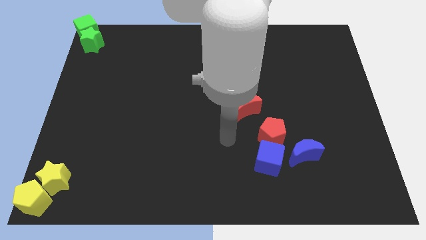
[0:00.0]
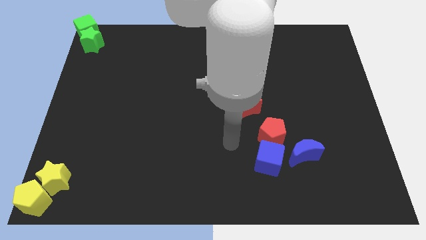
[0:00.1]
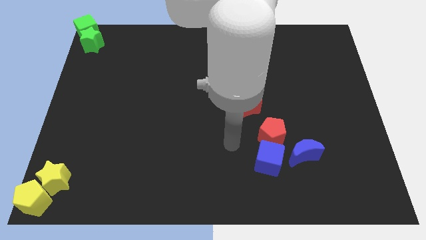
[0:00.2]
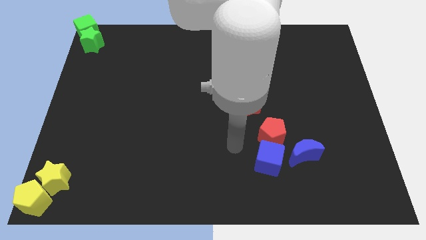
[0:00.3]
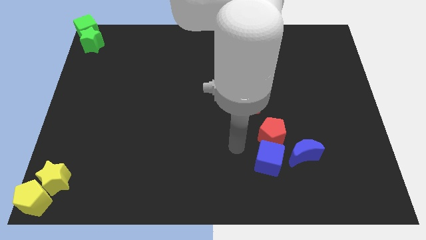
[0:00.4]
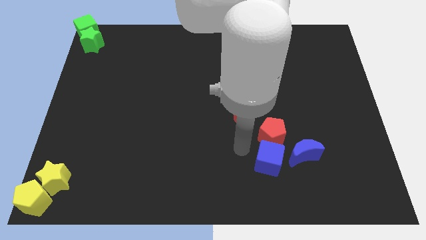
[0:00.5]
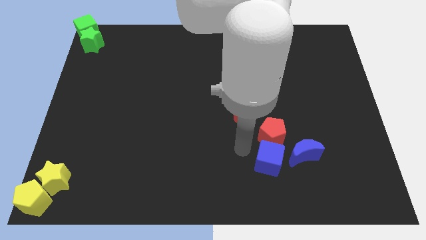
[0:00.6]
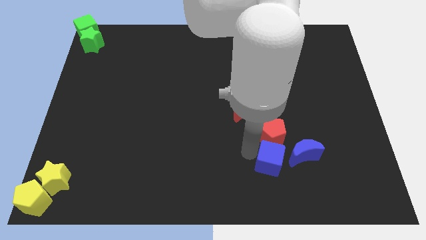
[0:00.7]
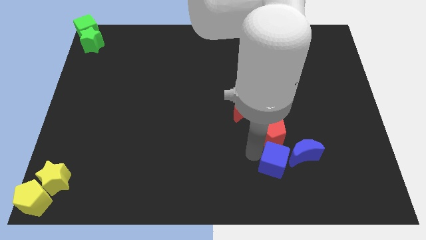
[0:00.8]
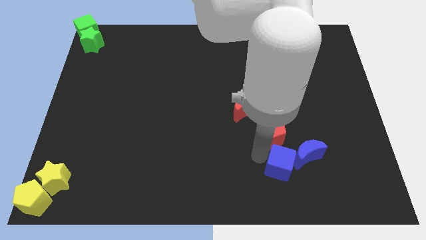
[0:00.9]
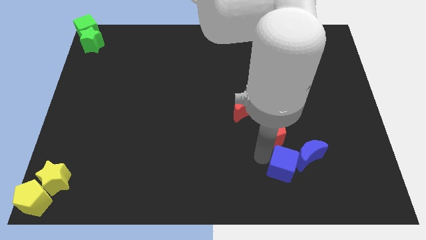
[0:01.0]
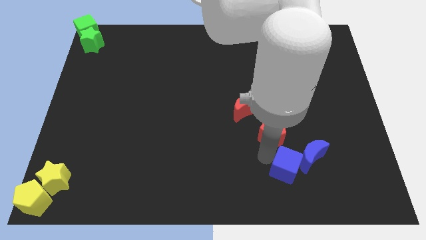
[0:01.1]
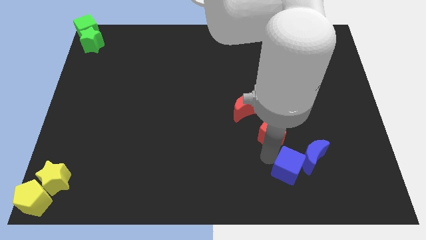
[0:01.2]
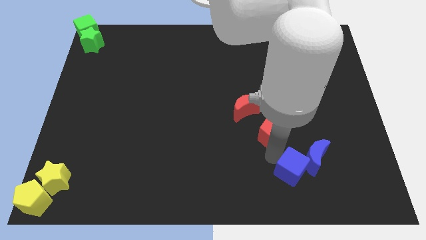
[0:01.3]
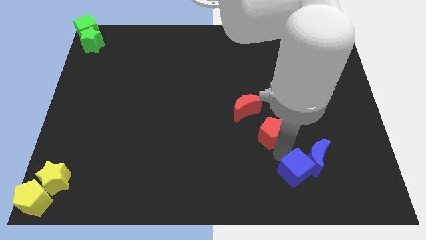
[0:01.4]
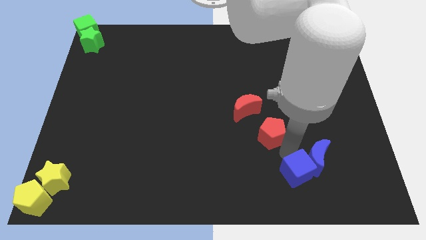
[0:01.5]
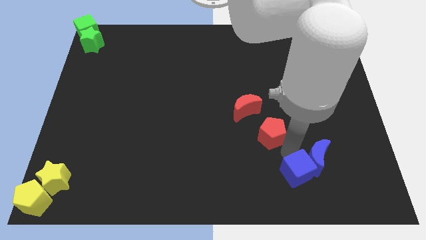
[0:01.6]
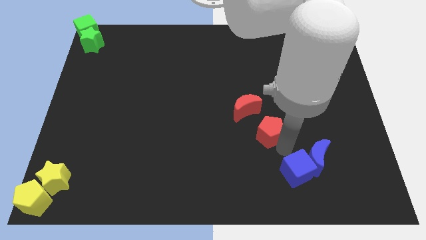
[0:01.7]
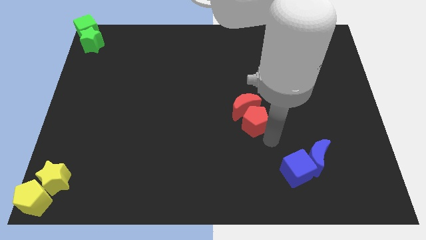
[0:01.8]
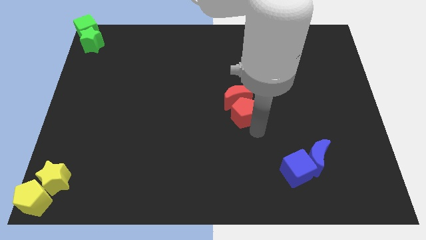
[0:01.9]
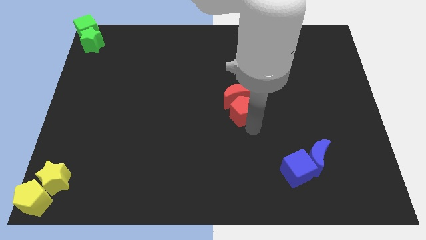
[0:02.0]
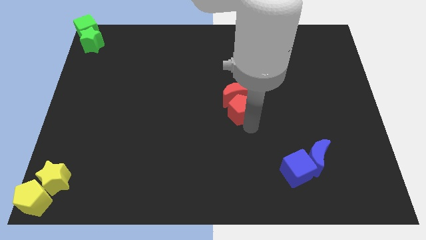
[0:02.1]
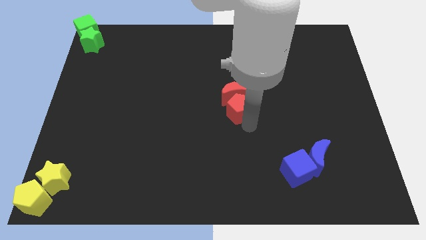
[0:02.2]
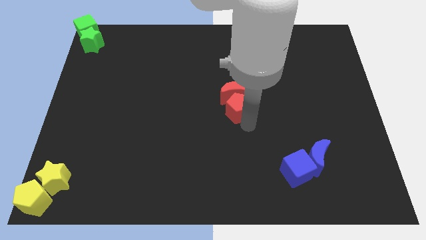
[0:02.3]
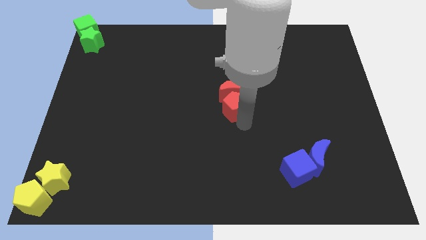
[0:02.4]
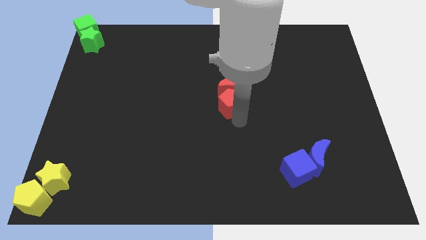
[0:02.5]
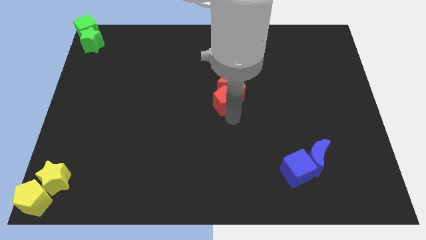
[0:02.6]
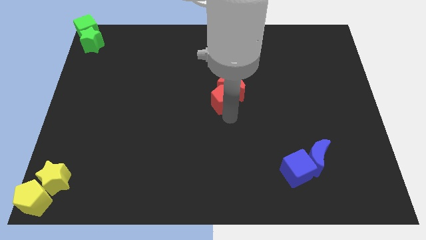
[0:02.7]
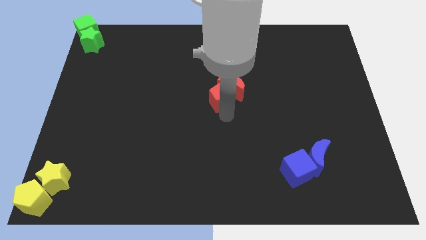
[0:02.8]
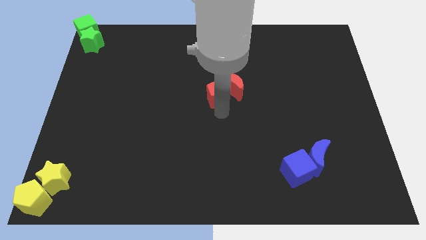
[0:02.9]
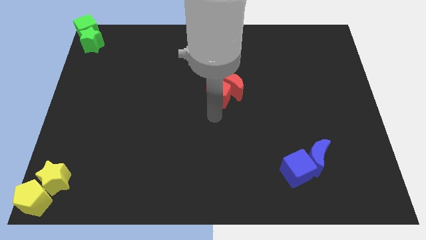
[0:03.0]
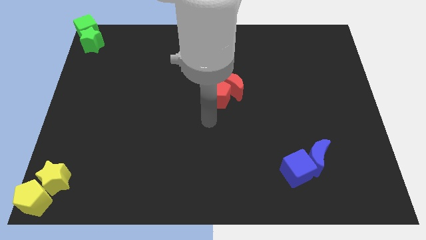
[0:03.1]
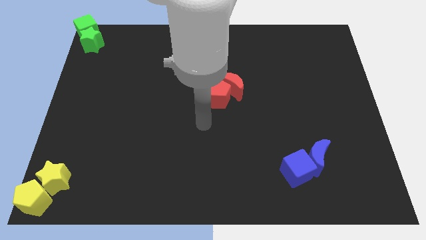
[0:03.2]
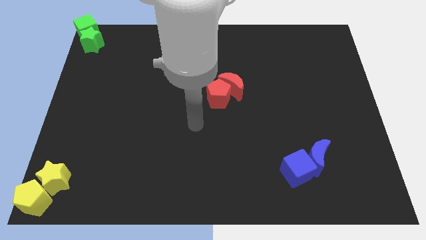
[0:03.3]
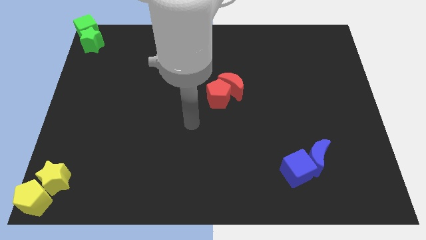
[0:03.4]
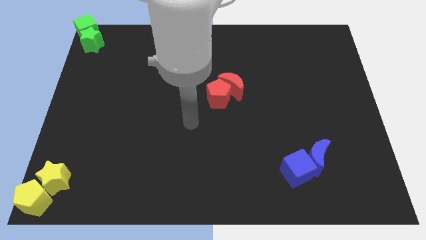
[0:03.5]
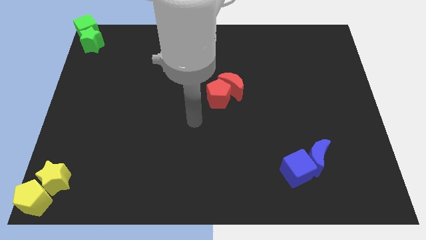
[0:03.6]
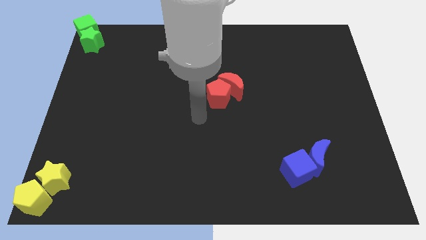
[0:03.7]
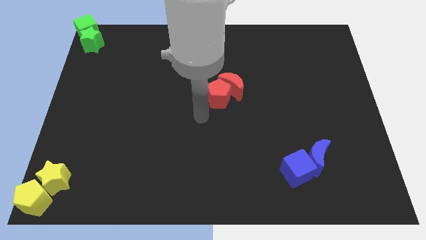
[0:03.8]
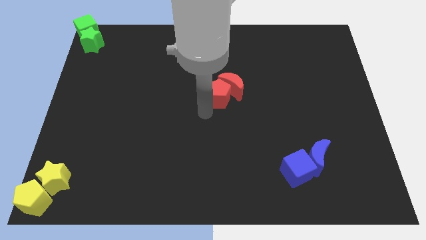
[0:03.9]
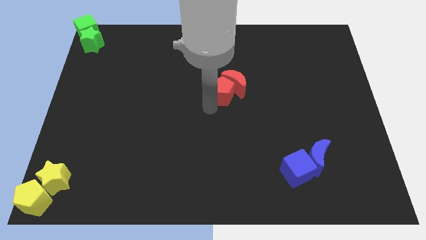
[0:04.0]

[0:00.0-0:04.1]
push the red pentagon into the red moon

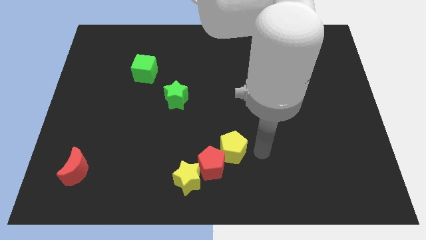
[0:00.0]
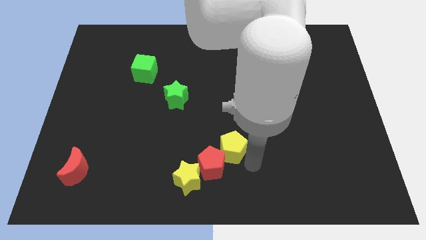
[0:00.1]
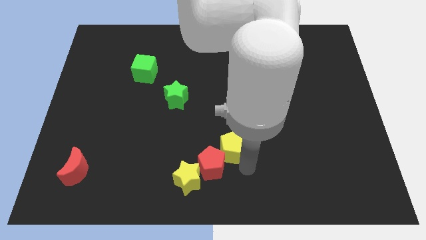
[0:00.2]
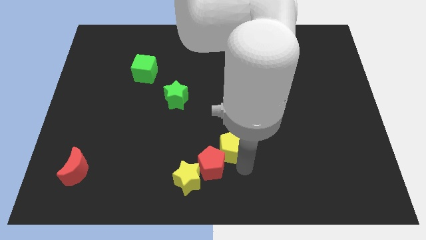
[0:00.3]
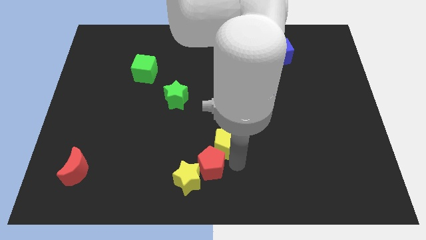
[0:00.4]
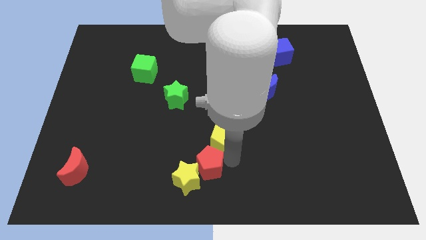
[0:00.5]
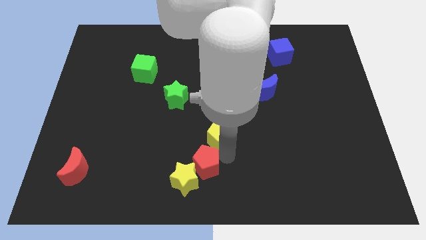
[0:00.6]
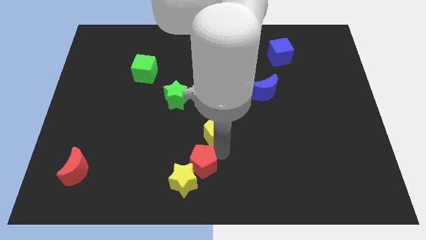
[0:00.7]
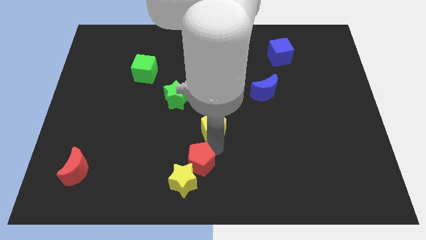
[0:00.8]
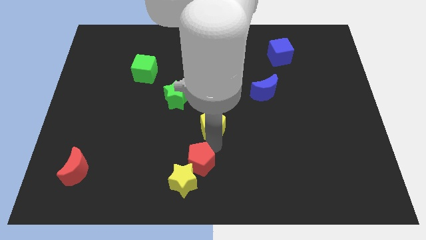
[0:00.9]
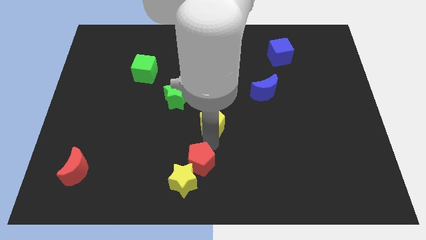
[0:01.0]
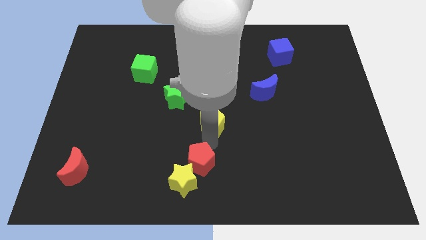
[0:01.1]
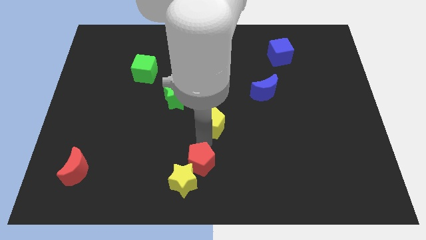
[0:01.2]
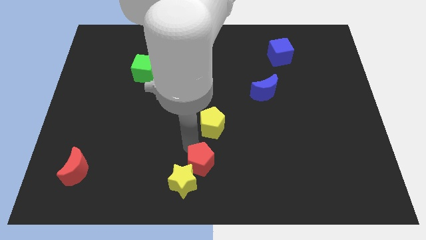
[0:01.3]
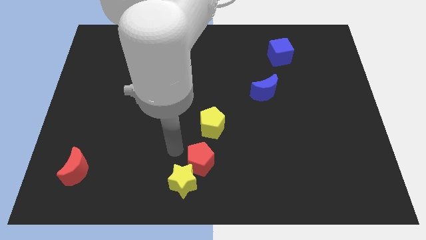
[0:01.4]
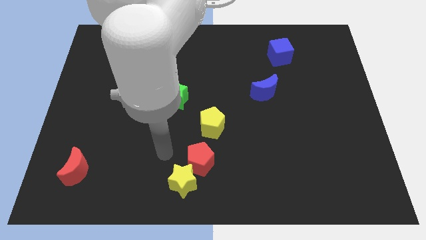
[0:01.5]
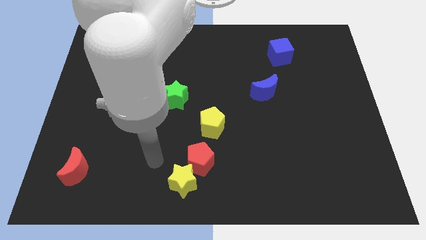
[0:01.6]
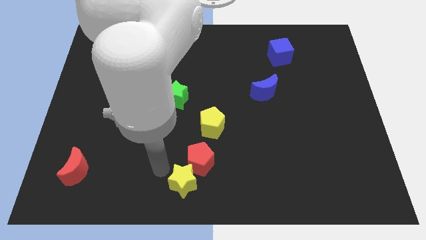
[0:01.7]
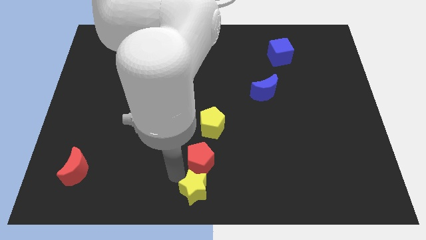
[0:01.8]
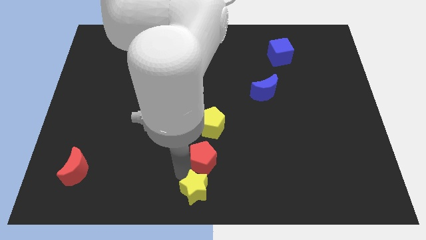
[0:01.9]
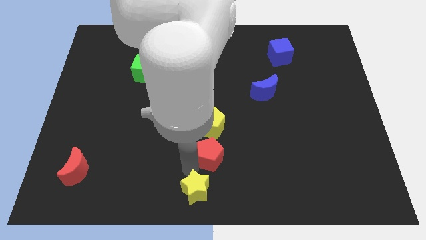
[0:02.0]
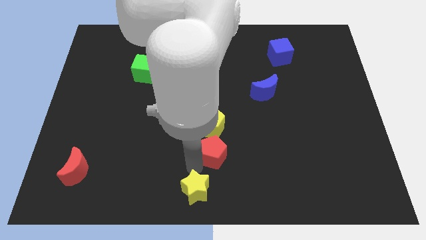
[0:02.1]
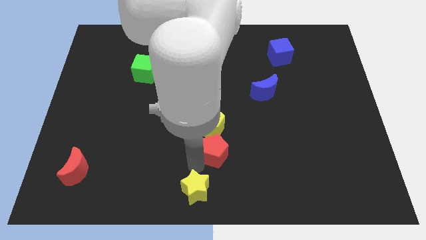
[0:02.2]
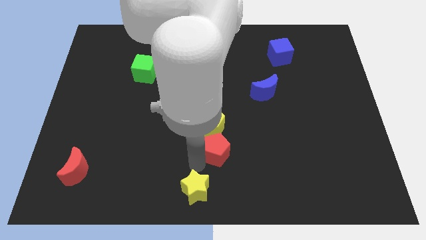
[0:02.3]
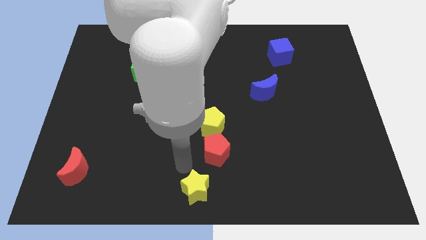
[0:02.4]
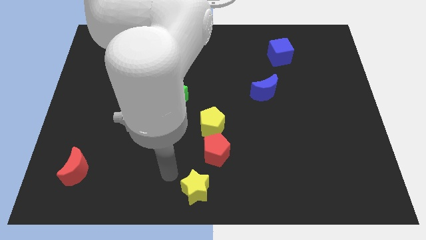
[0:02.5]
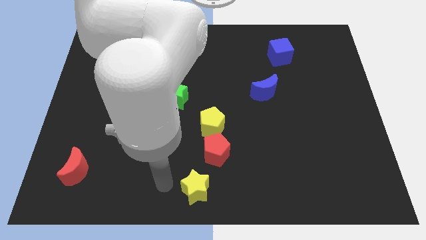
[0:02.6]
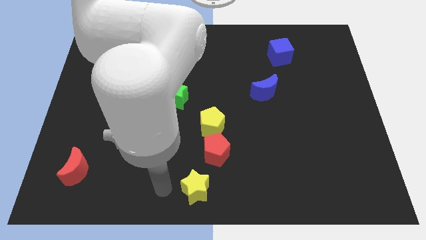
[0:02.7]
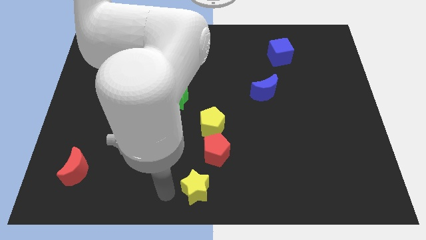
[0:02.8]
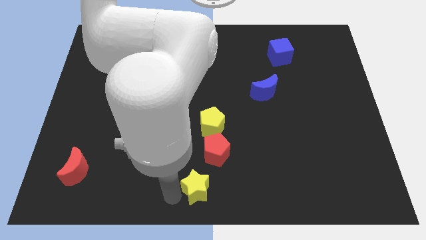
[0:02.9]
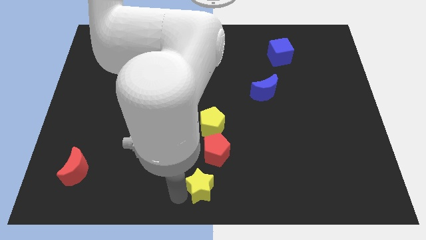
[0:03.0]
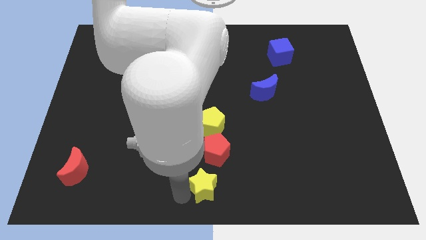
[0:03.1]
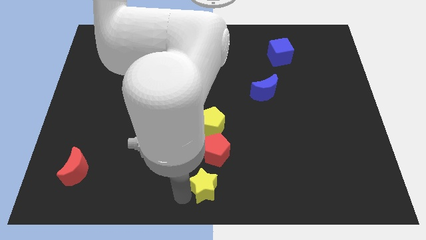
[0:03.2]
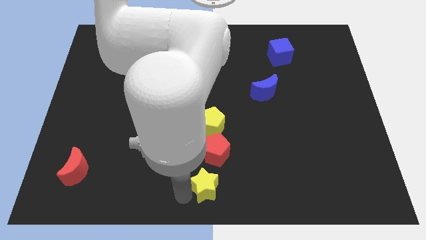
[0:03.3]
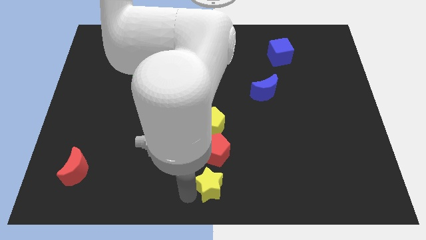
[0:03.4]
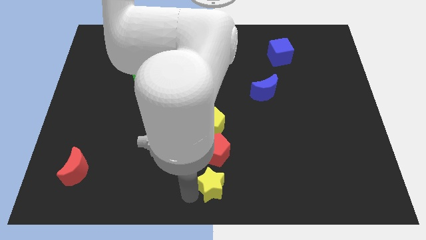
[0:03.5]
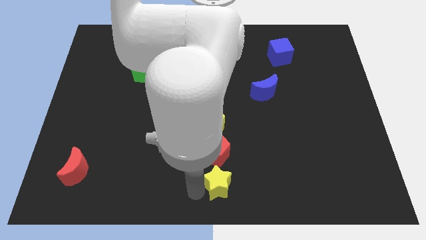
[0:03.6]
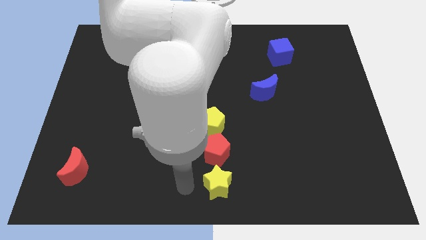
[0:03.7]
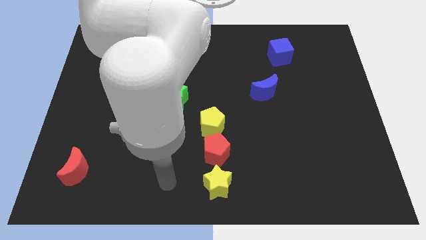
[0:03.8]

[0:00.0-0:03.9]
place the yellow blocks and red pentagon vertically

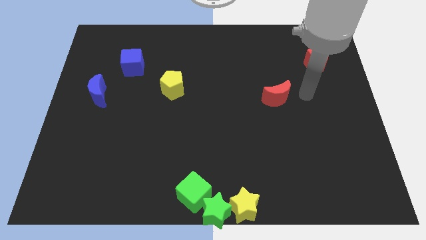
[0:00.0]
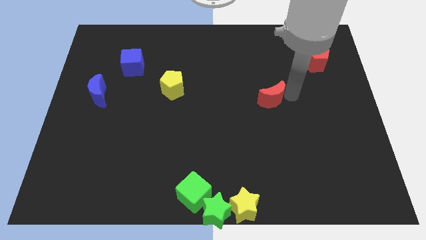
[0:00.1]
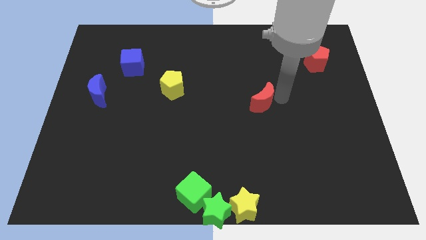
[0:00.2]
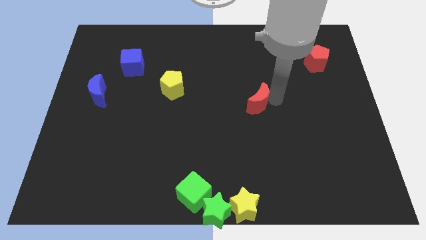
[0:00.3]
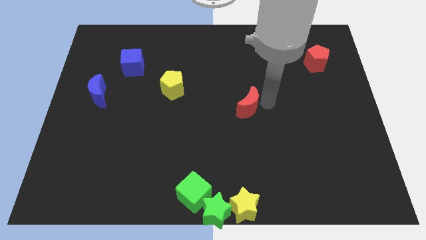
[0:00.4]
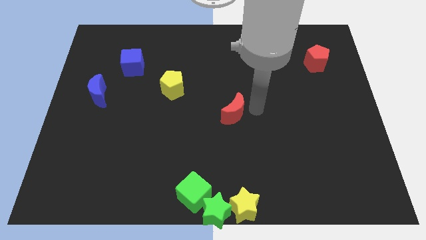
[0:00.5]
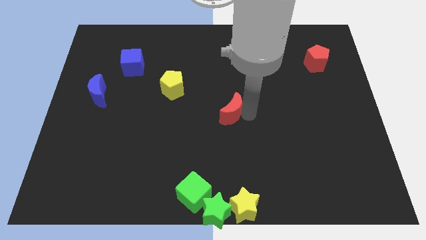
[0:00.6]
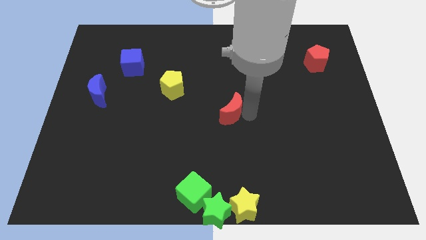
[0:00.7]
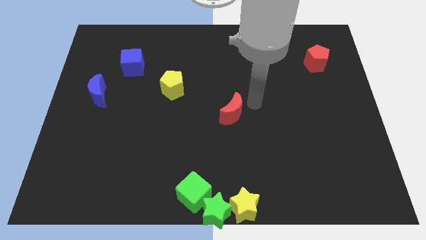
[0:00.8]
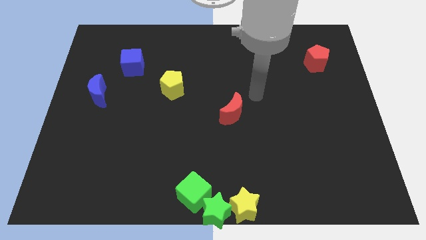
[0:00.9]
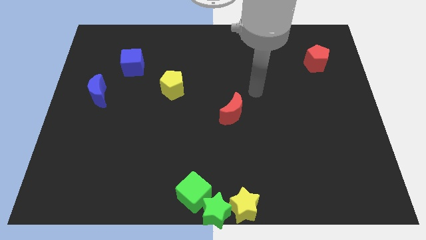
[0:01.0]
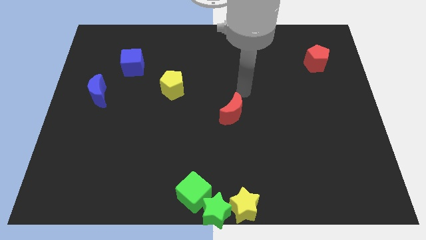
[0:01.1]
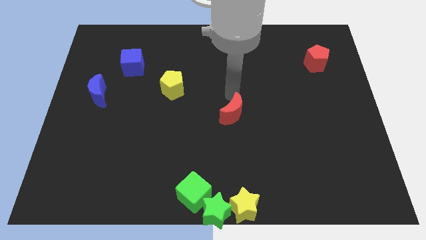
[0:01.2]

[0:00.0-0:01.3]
move the red moon to the center
